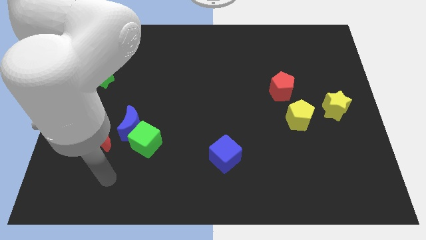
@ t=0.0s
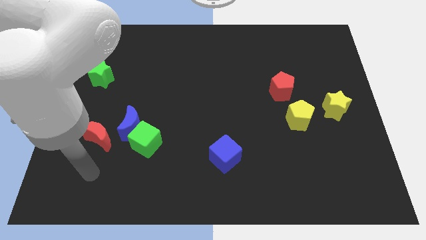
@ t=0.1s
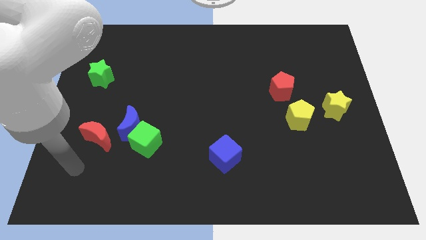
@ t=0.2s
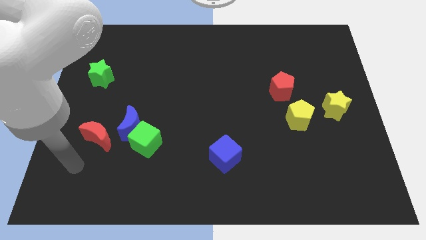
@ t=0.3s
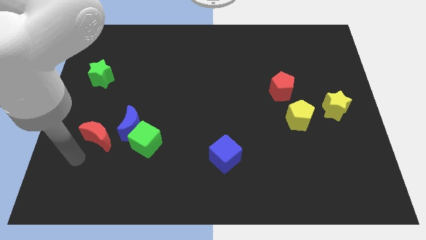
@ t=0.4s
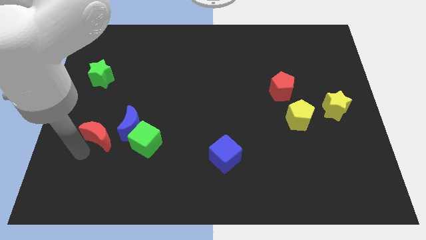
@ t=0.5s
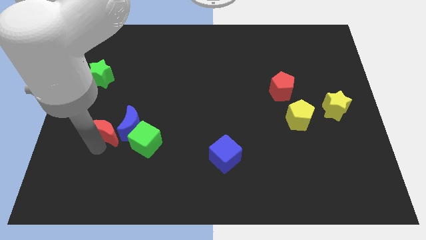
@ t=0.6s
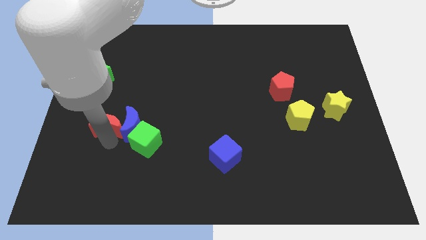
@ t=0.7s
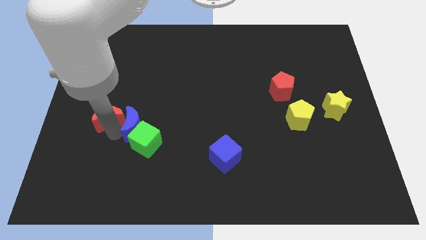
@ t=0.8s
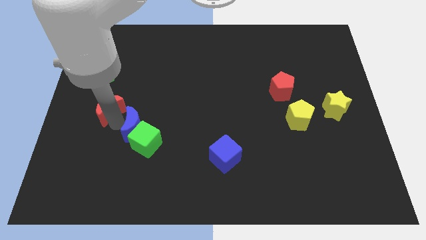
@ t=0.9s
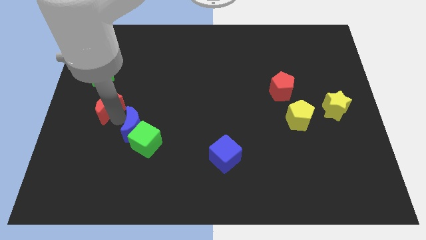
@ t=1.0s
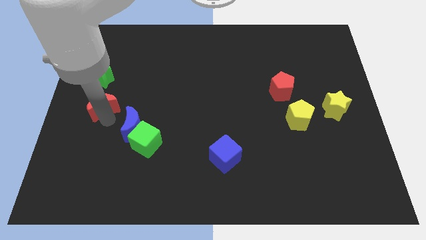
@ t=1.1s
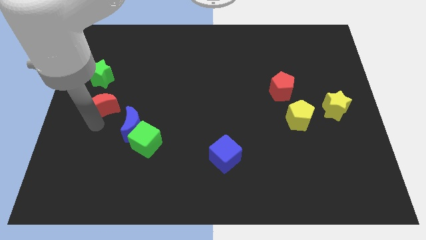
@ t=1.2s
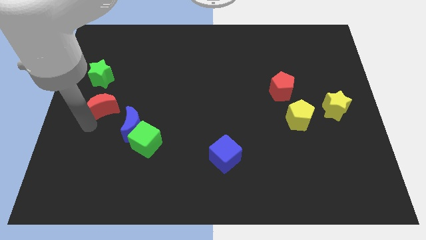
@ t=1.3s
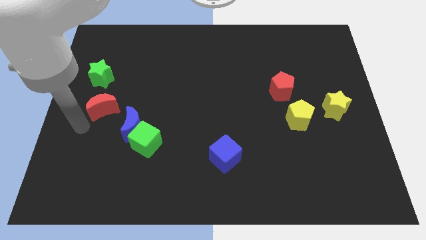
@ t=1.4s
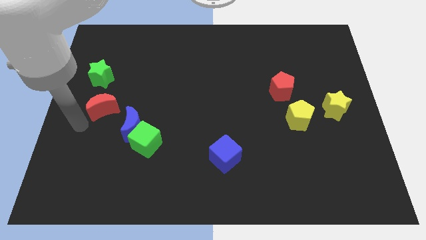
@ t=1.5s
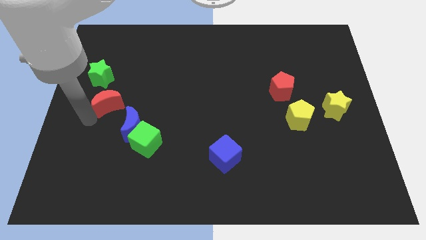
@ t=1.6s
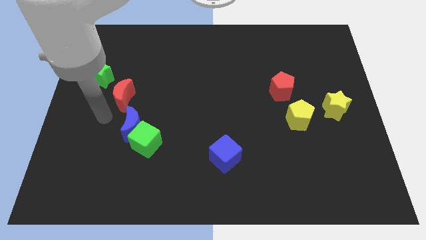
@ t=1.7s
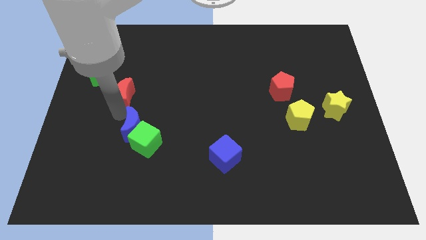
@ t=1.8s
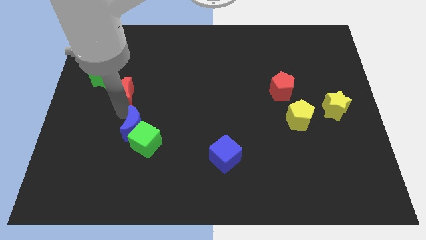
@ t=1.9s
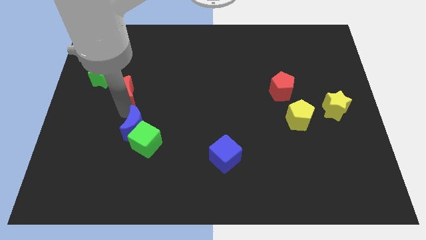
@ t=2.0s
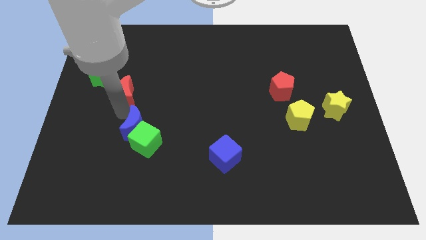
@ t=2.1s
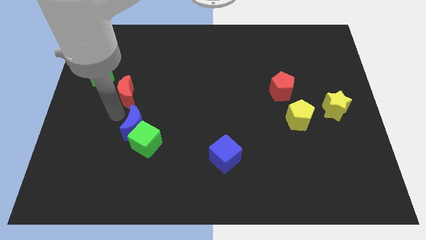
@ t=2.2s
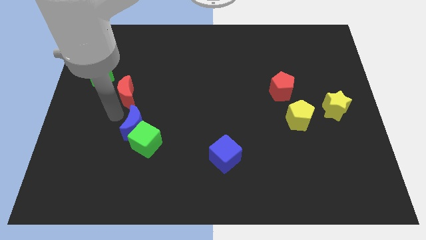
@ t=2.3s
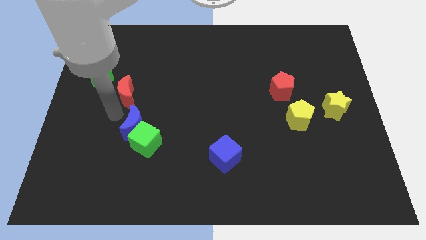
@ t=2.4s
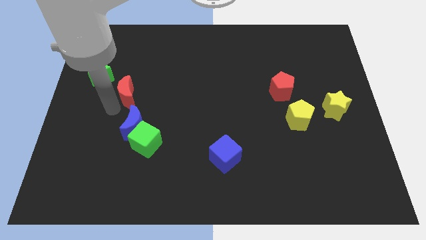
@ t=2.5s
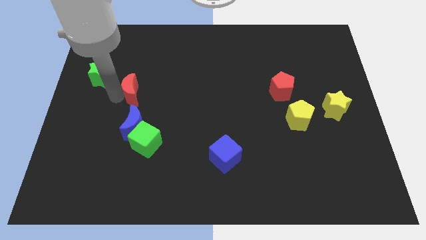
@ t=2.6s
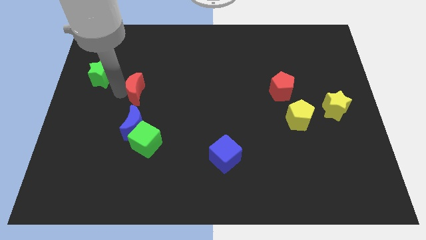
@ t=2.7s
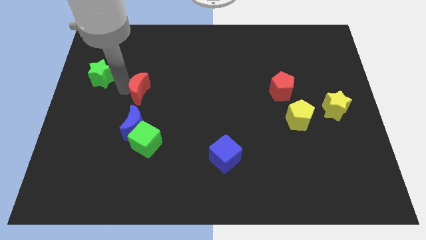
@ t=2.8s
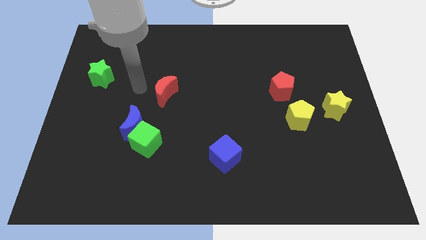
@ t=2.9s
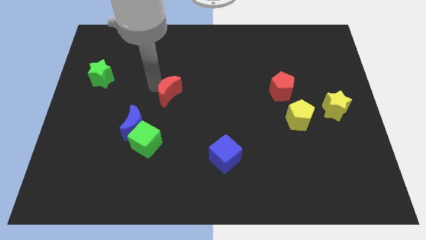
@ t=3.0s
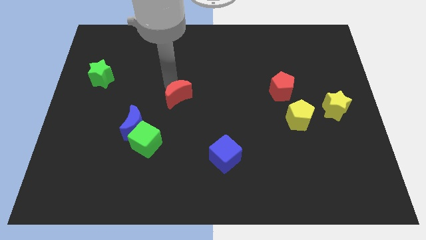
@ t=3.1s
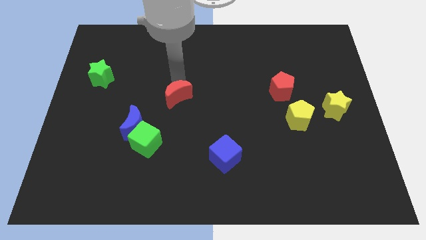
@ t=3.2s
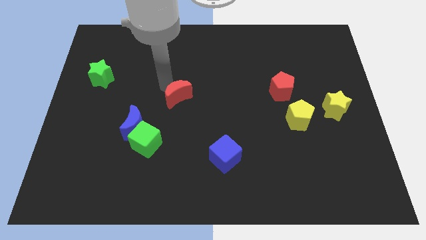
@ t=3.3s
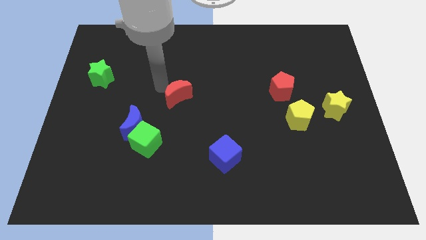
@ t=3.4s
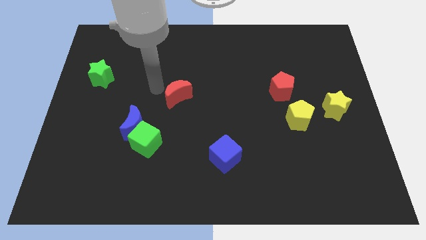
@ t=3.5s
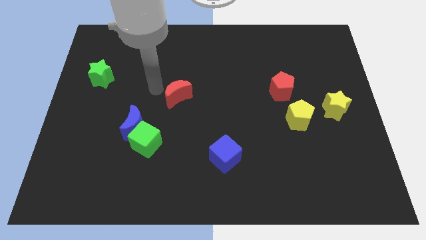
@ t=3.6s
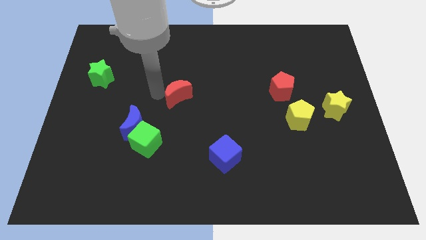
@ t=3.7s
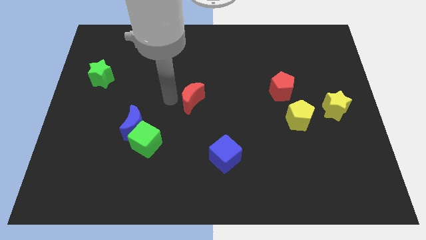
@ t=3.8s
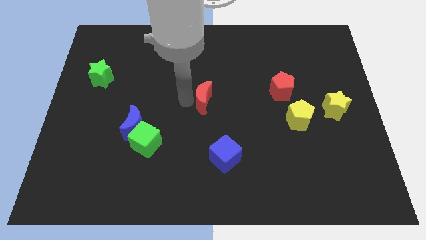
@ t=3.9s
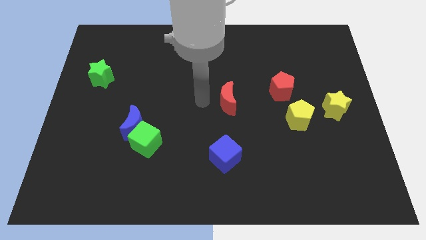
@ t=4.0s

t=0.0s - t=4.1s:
push the red crescent to the center of the board

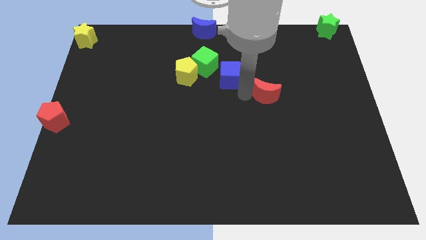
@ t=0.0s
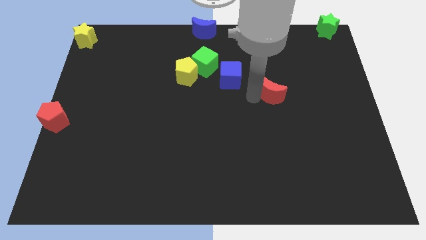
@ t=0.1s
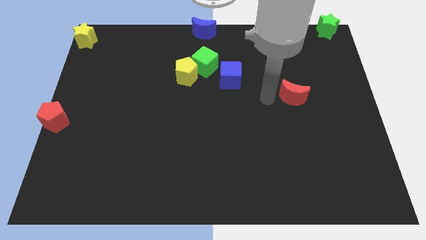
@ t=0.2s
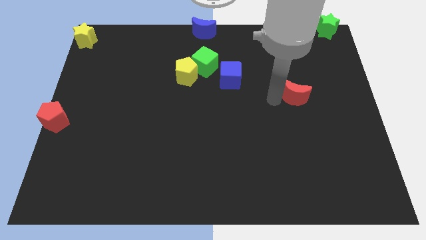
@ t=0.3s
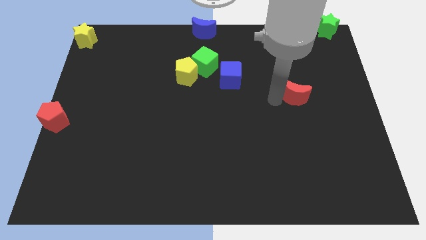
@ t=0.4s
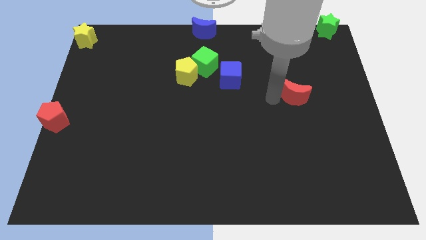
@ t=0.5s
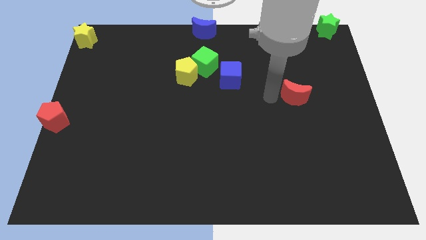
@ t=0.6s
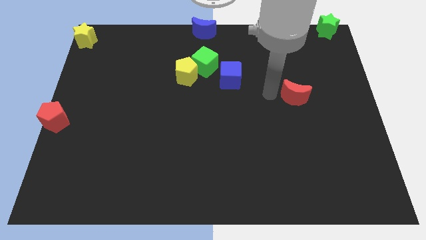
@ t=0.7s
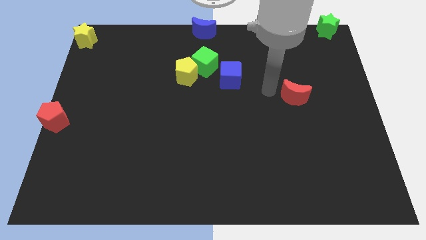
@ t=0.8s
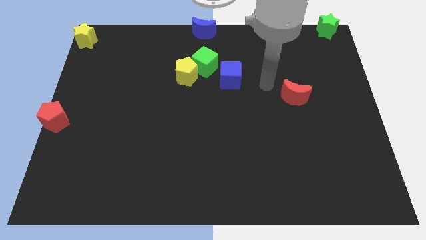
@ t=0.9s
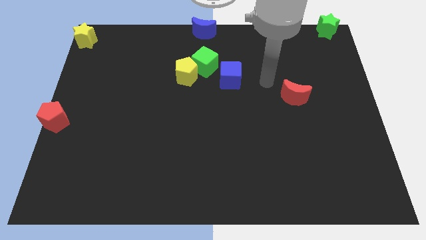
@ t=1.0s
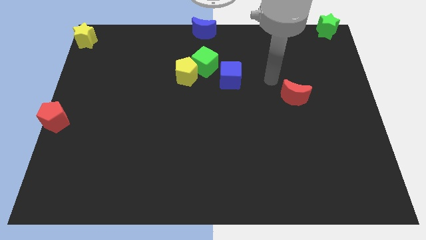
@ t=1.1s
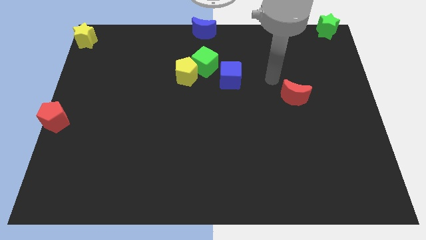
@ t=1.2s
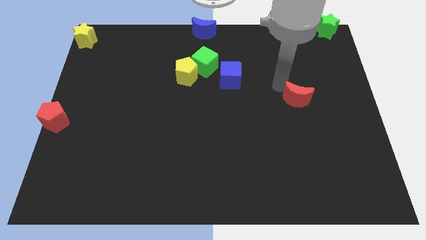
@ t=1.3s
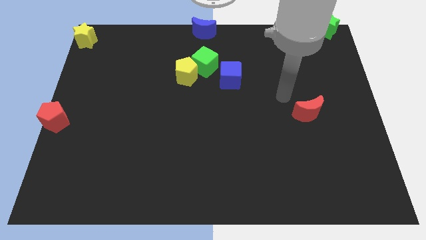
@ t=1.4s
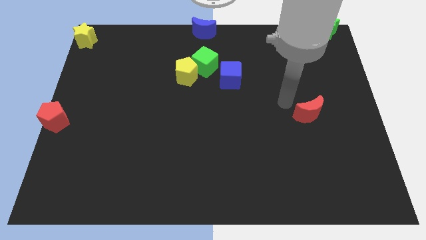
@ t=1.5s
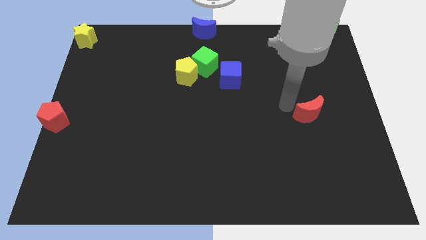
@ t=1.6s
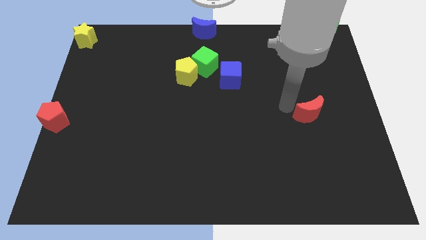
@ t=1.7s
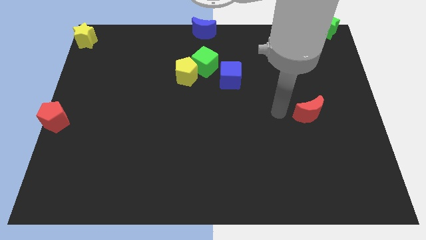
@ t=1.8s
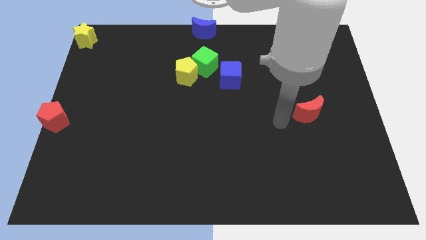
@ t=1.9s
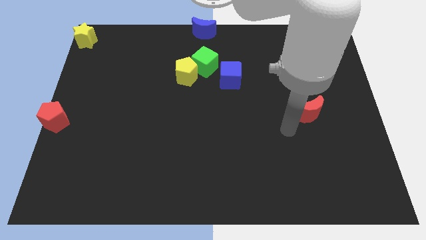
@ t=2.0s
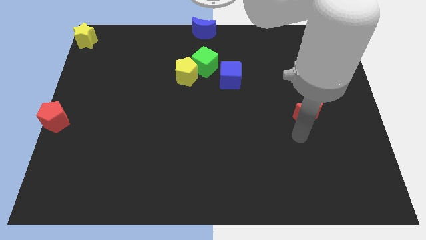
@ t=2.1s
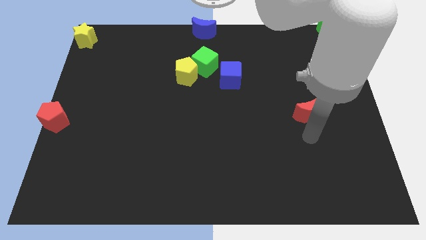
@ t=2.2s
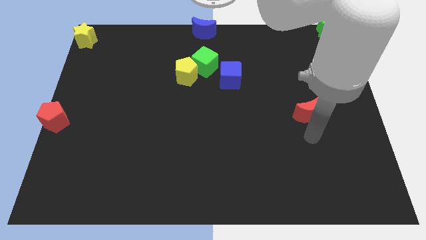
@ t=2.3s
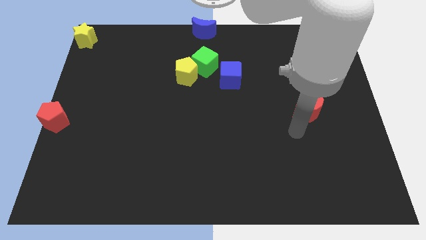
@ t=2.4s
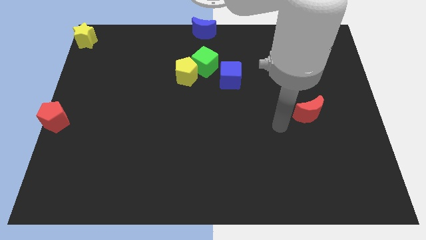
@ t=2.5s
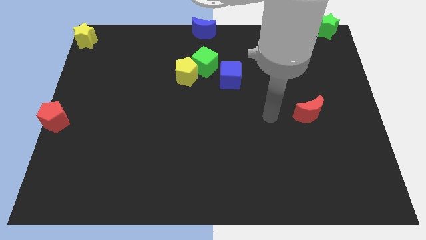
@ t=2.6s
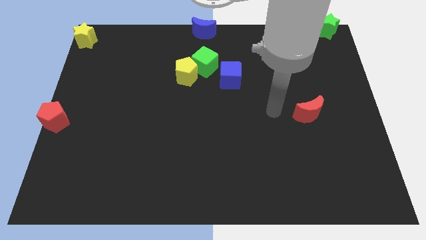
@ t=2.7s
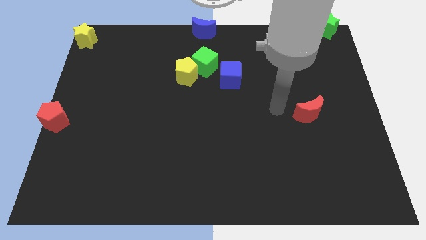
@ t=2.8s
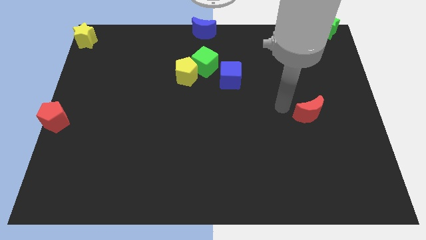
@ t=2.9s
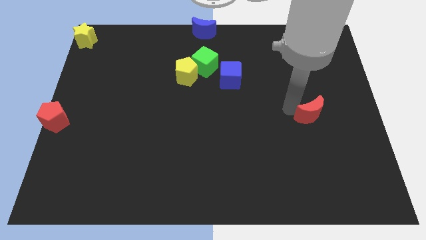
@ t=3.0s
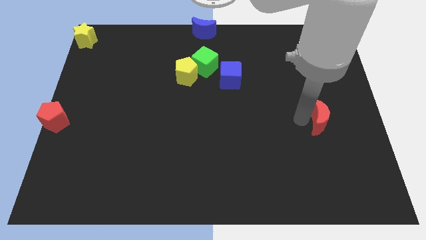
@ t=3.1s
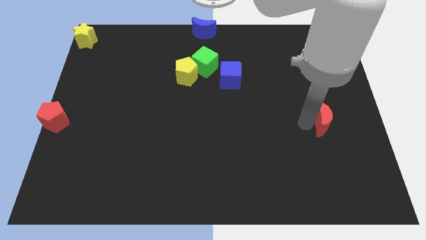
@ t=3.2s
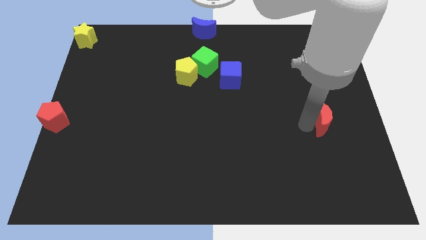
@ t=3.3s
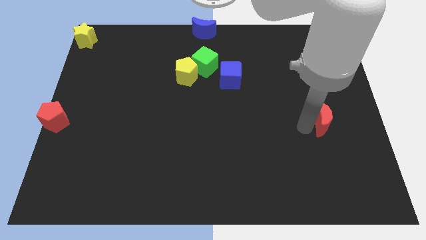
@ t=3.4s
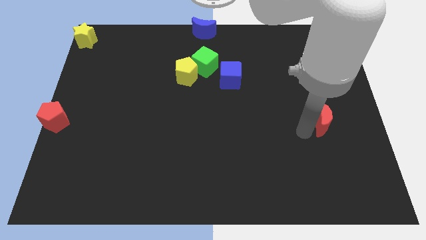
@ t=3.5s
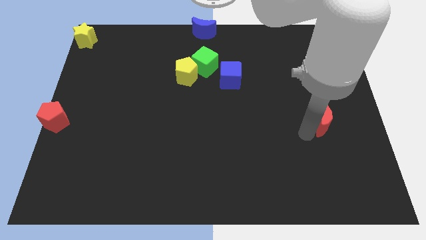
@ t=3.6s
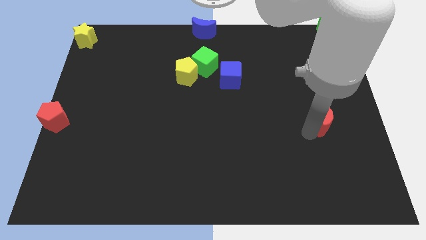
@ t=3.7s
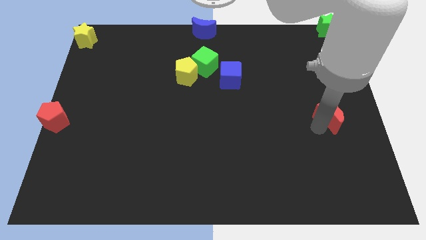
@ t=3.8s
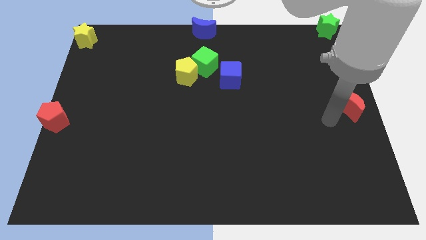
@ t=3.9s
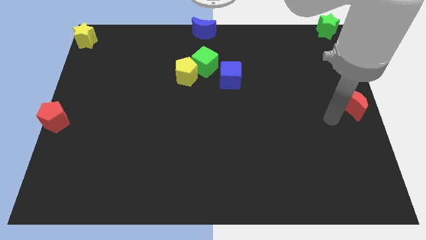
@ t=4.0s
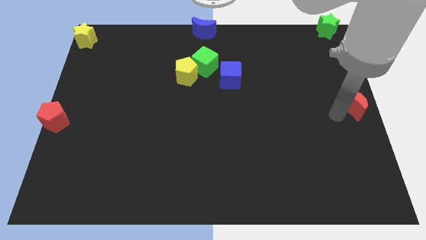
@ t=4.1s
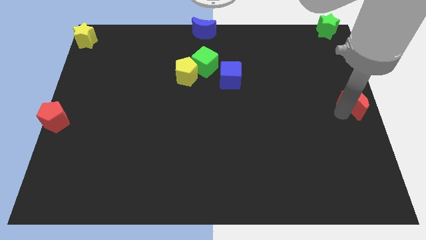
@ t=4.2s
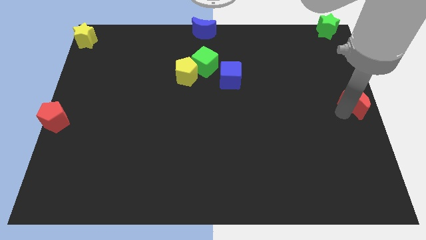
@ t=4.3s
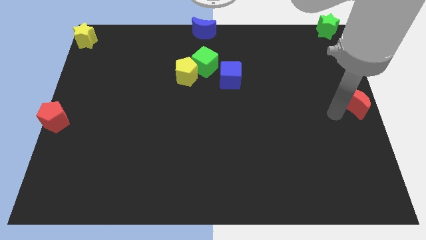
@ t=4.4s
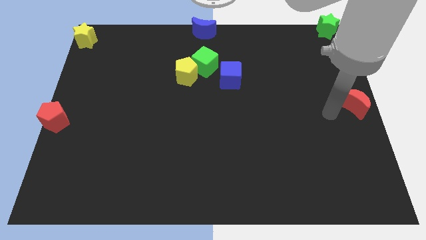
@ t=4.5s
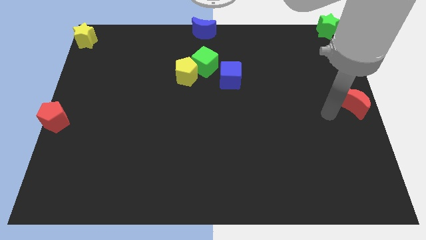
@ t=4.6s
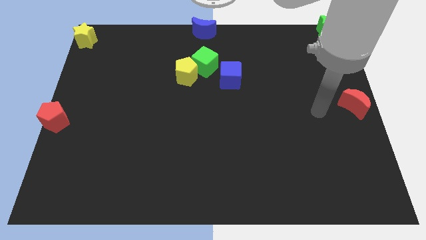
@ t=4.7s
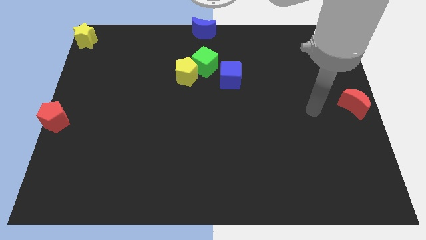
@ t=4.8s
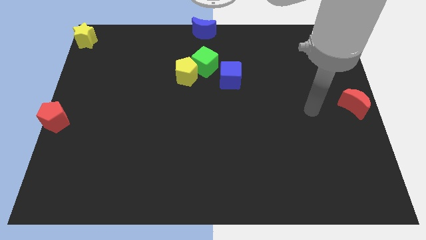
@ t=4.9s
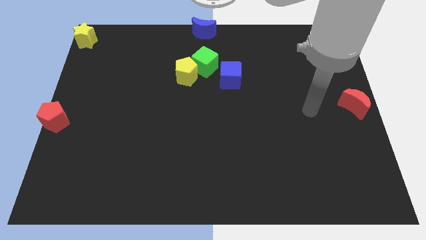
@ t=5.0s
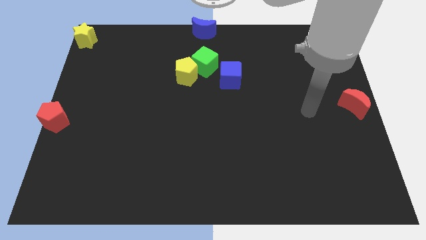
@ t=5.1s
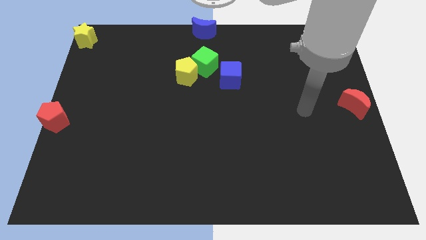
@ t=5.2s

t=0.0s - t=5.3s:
slide the red crescent to center right of the board
